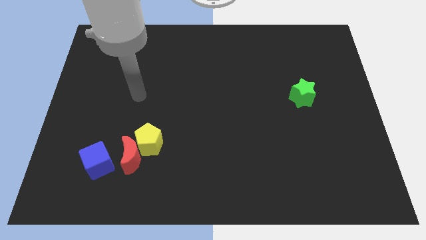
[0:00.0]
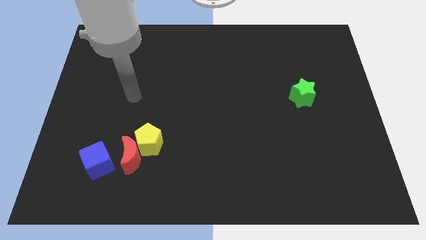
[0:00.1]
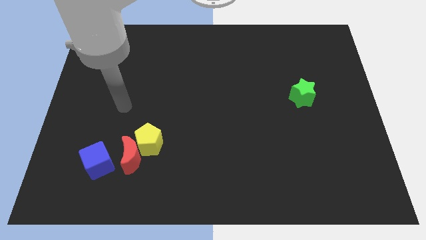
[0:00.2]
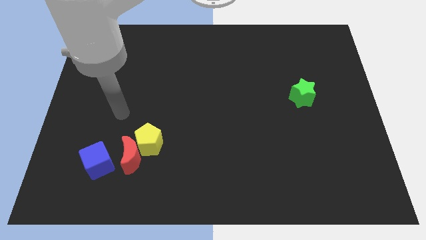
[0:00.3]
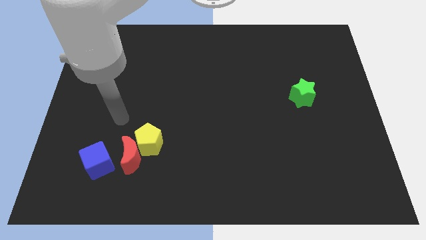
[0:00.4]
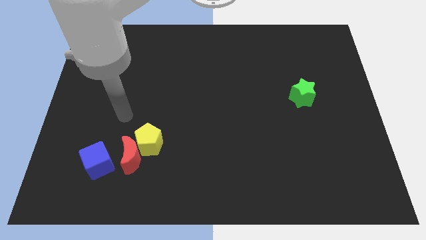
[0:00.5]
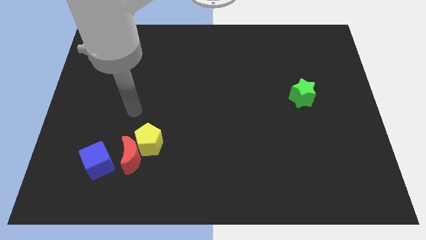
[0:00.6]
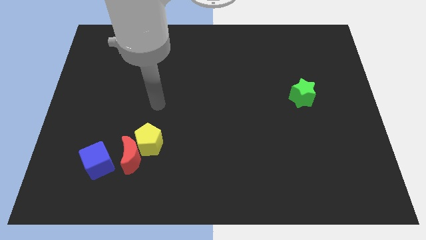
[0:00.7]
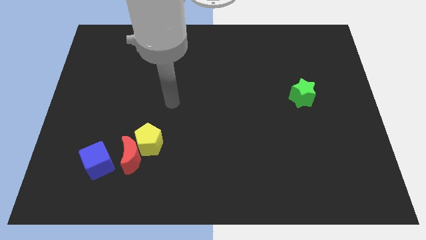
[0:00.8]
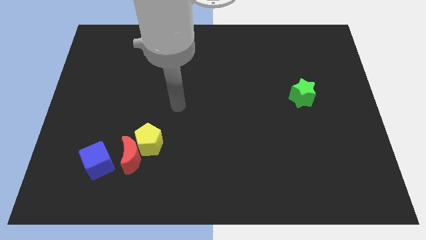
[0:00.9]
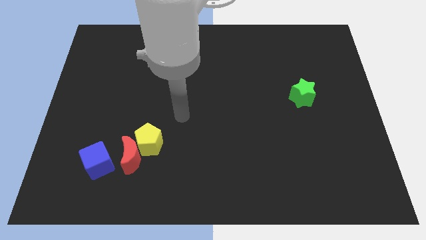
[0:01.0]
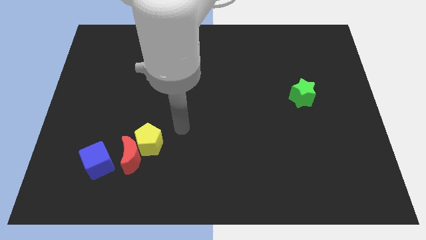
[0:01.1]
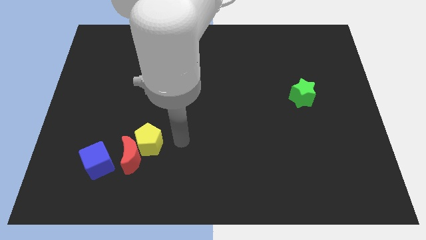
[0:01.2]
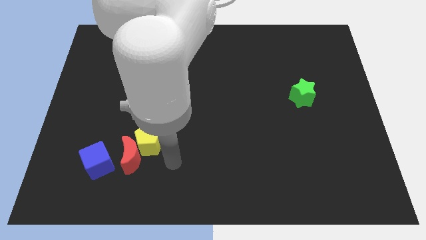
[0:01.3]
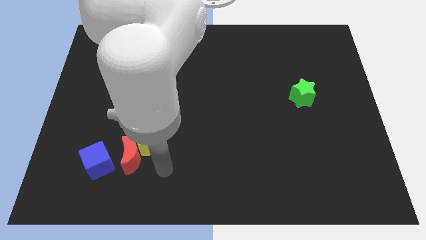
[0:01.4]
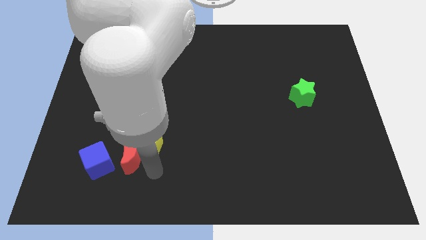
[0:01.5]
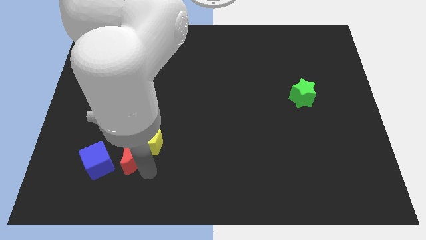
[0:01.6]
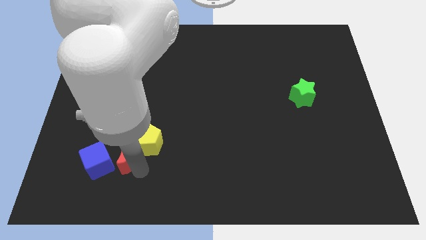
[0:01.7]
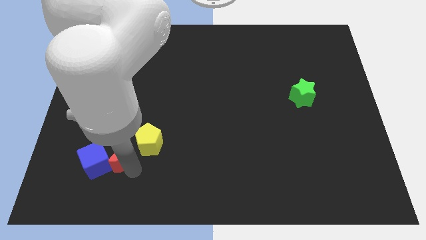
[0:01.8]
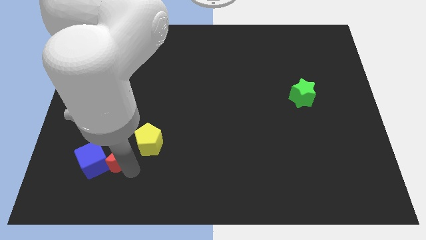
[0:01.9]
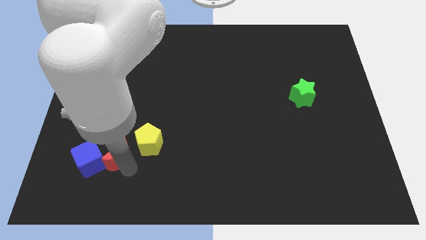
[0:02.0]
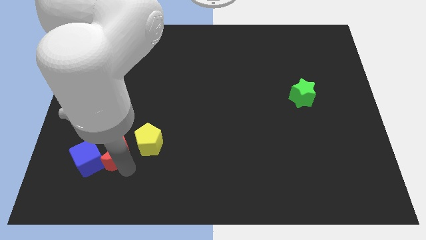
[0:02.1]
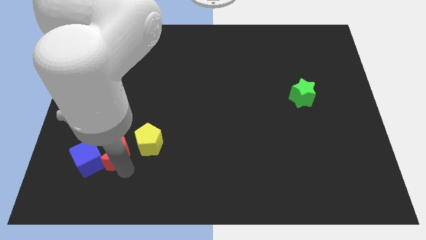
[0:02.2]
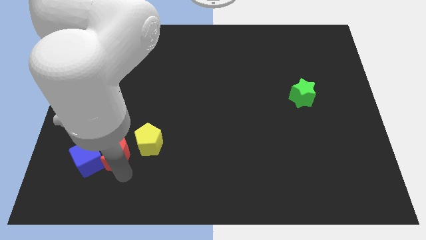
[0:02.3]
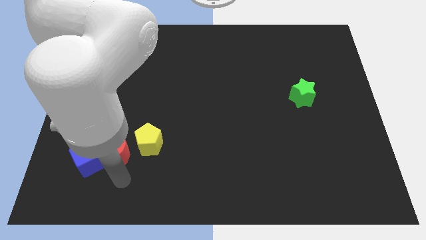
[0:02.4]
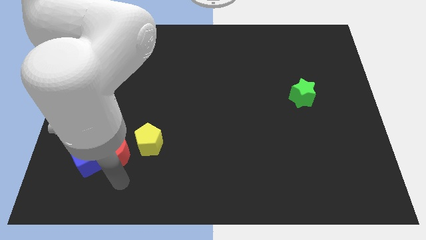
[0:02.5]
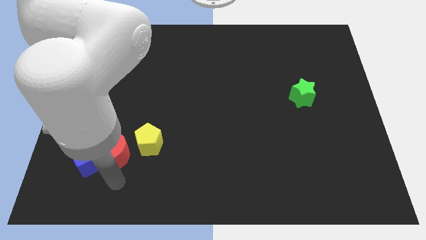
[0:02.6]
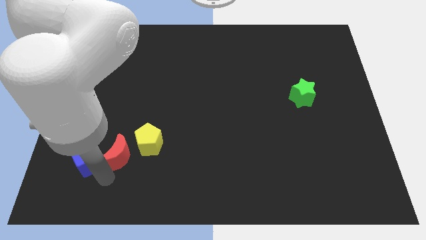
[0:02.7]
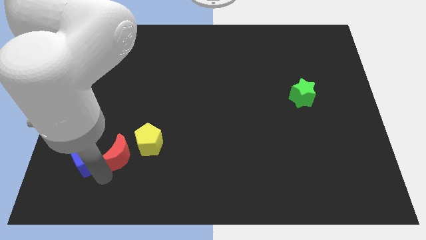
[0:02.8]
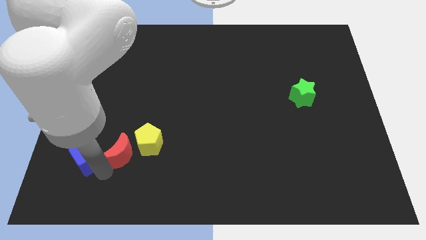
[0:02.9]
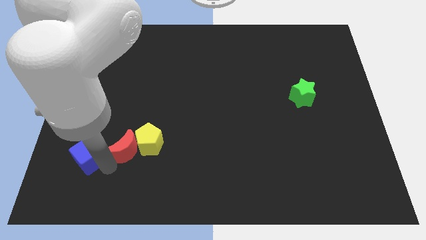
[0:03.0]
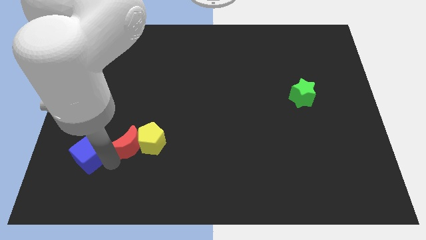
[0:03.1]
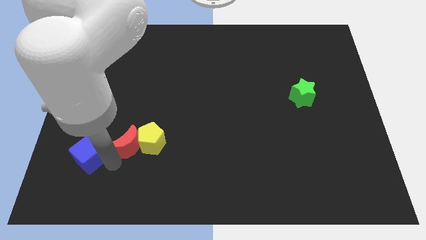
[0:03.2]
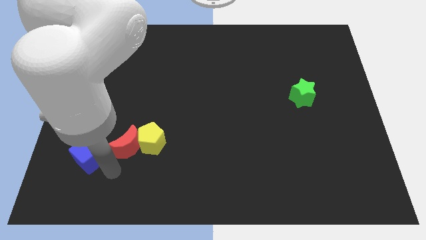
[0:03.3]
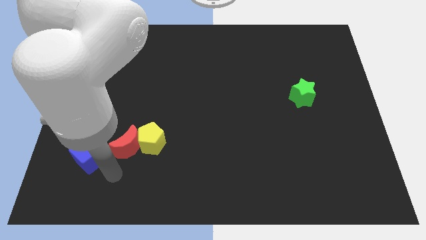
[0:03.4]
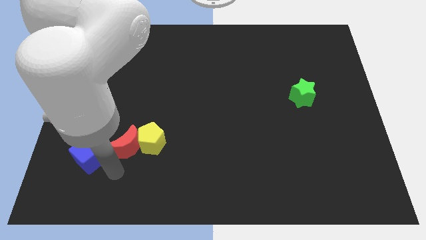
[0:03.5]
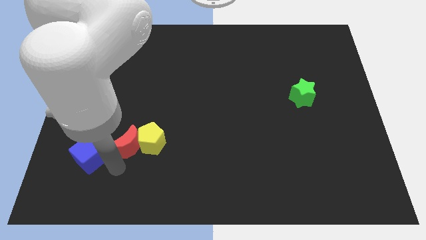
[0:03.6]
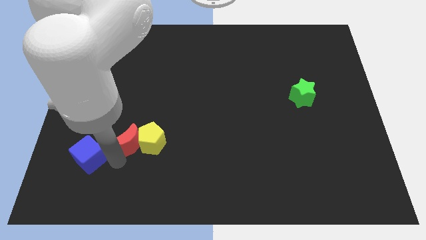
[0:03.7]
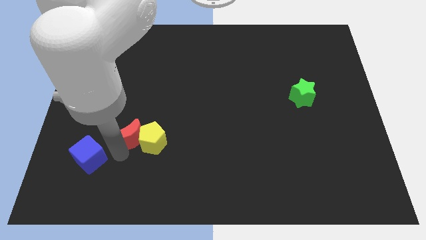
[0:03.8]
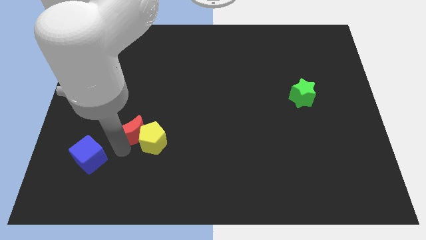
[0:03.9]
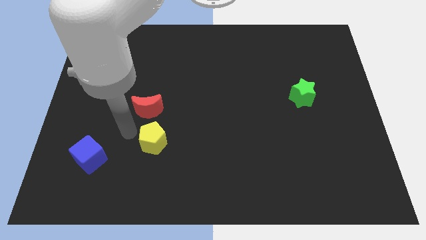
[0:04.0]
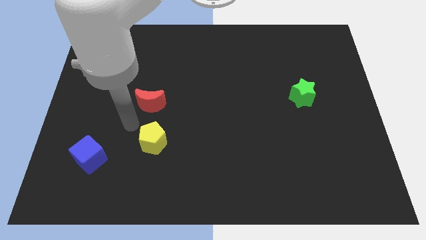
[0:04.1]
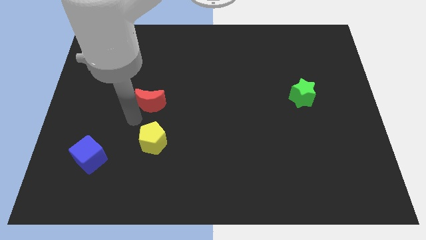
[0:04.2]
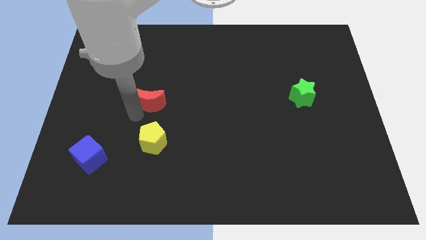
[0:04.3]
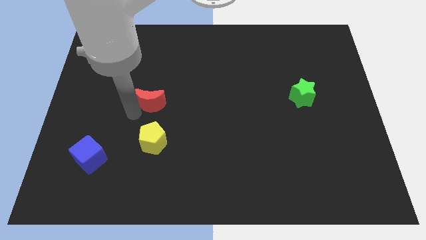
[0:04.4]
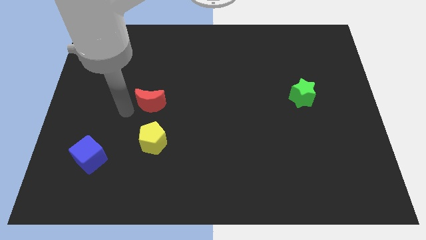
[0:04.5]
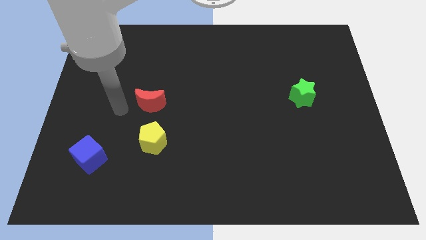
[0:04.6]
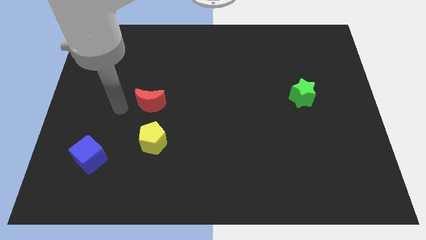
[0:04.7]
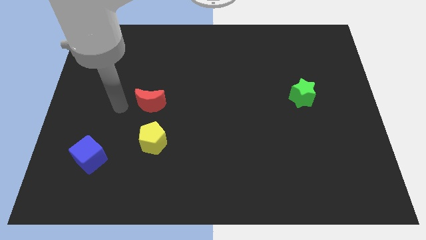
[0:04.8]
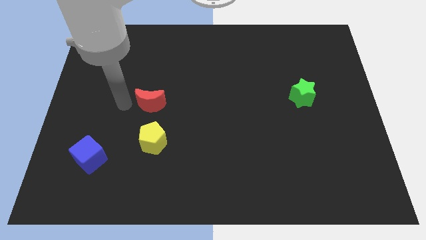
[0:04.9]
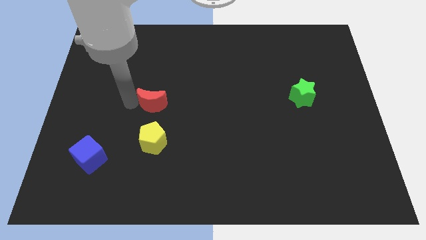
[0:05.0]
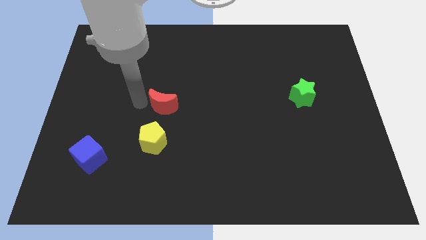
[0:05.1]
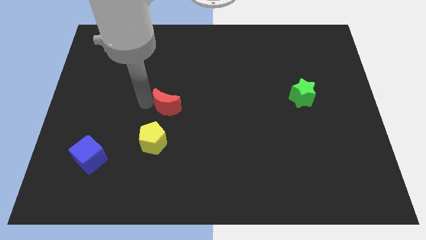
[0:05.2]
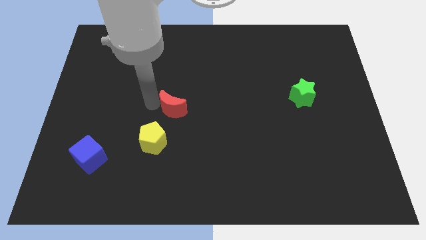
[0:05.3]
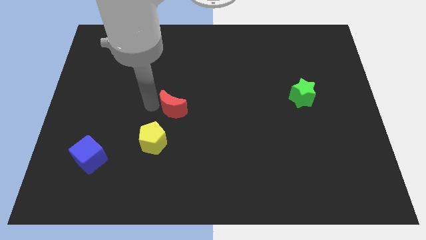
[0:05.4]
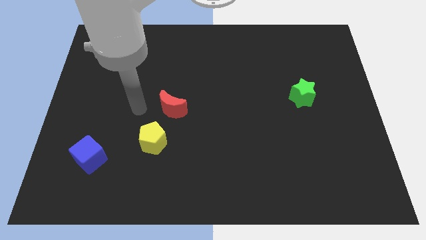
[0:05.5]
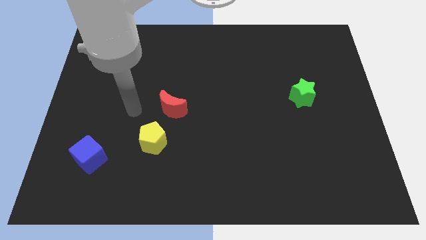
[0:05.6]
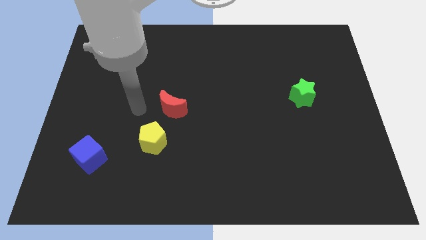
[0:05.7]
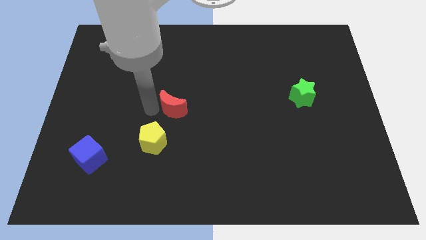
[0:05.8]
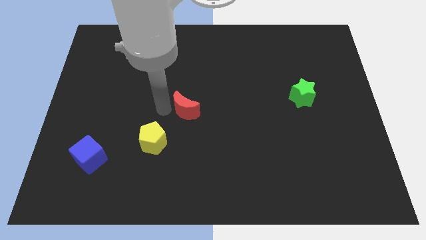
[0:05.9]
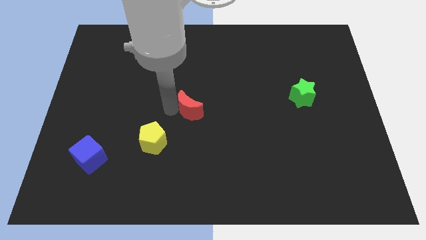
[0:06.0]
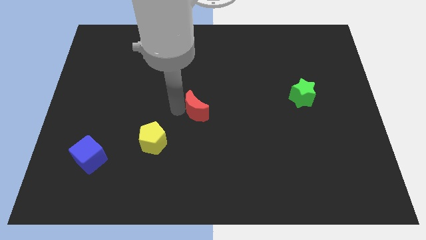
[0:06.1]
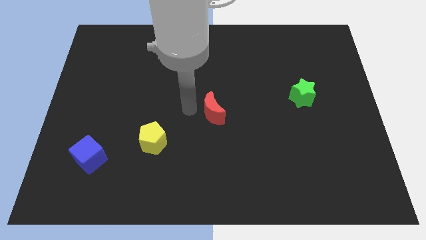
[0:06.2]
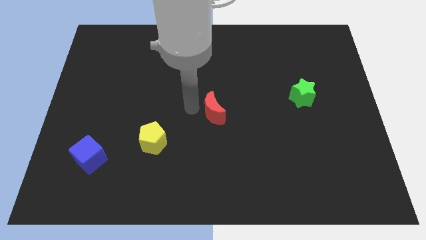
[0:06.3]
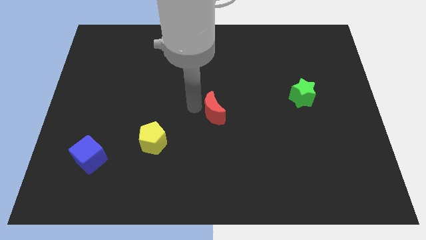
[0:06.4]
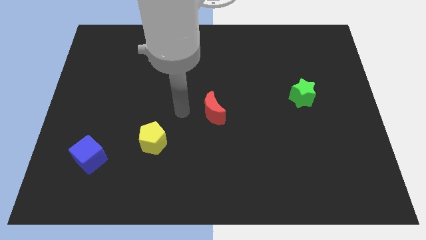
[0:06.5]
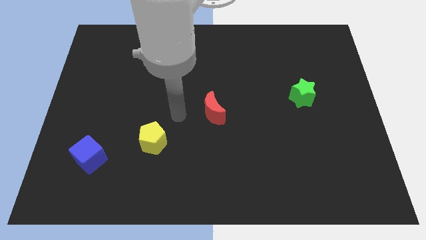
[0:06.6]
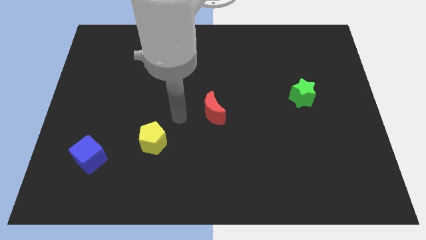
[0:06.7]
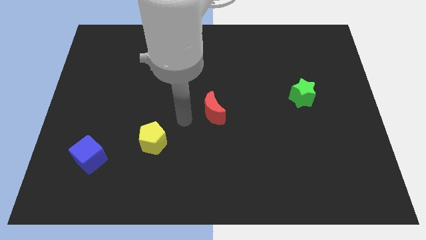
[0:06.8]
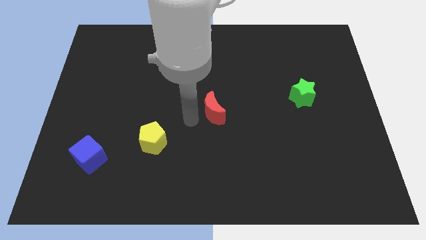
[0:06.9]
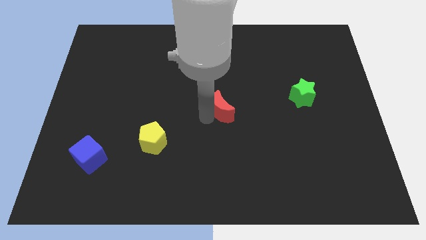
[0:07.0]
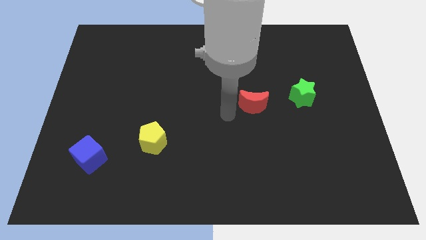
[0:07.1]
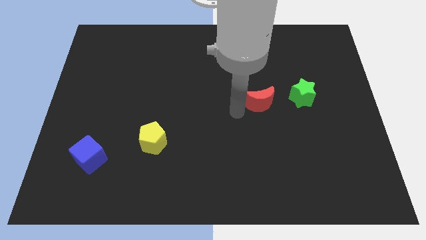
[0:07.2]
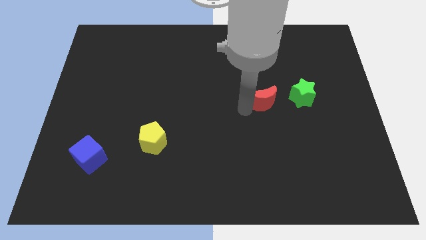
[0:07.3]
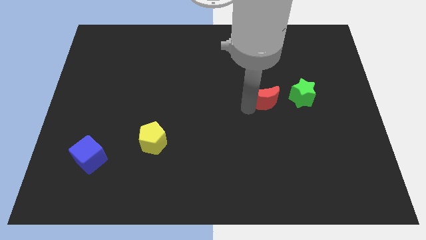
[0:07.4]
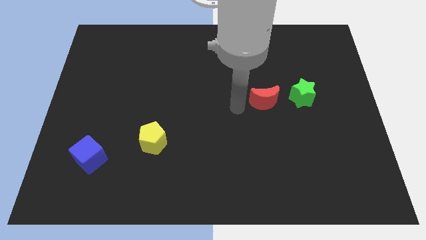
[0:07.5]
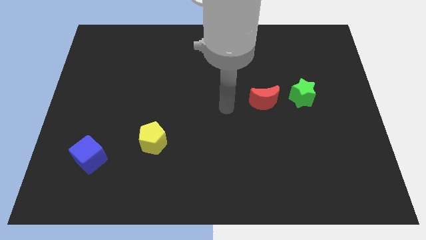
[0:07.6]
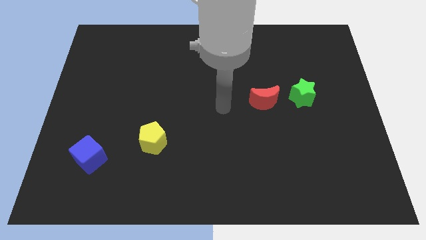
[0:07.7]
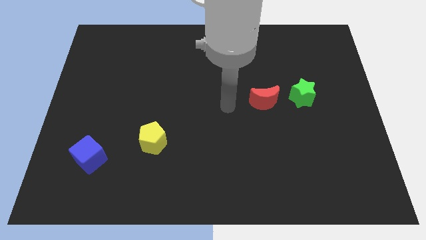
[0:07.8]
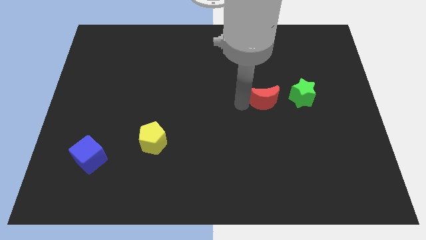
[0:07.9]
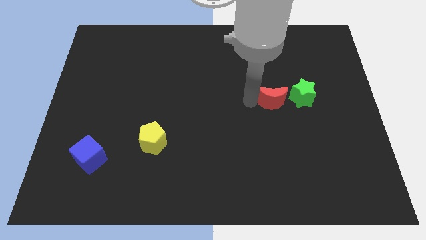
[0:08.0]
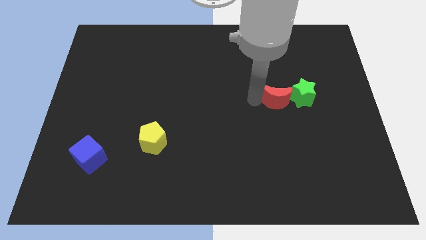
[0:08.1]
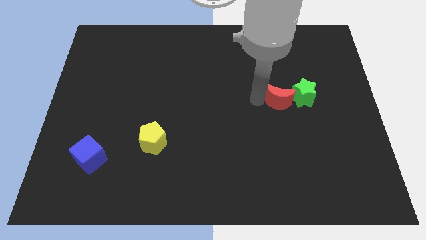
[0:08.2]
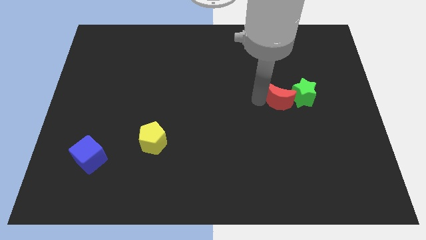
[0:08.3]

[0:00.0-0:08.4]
move the moon close to the star

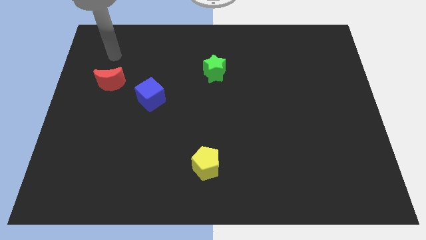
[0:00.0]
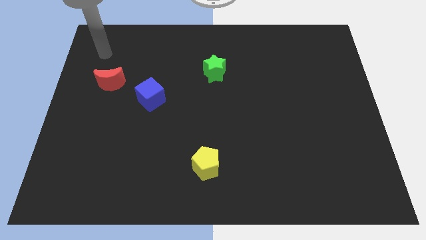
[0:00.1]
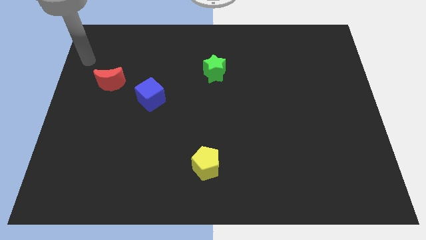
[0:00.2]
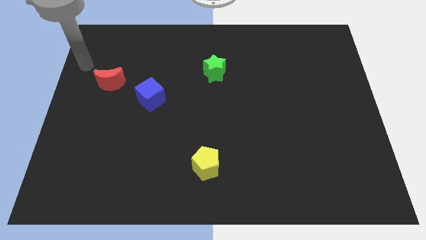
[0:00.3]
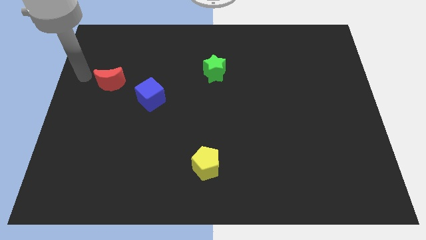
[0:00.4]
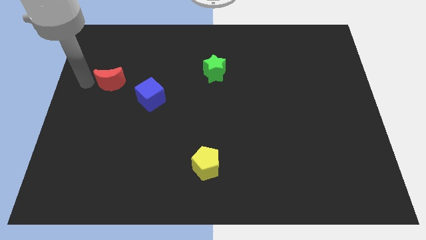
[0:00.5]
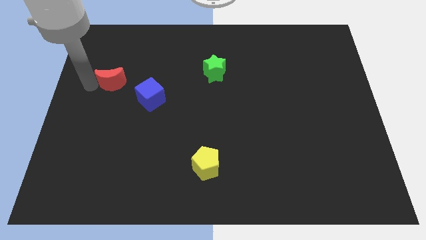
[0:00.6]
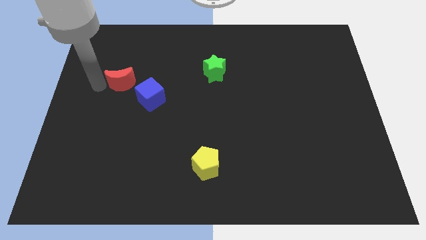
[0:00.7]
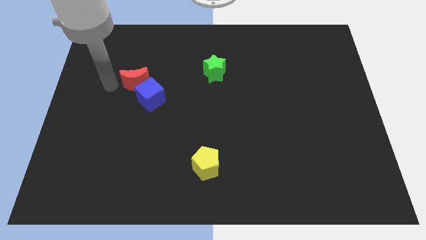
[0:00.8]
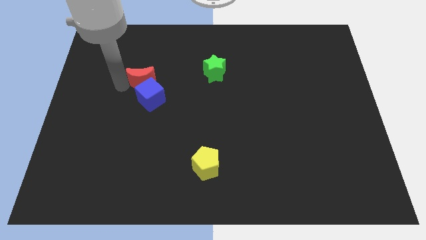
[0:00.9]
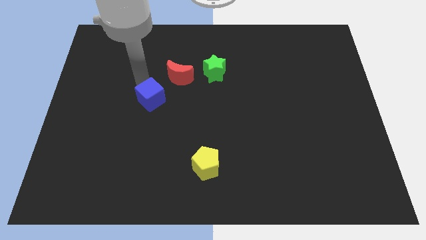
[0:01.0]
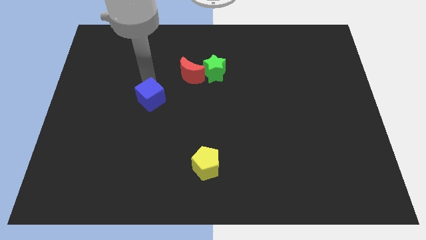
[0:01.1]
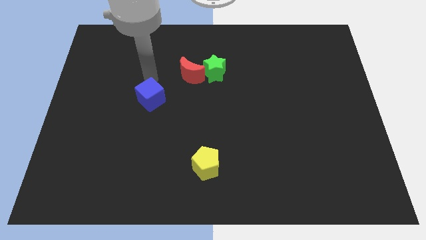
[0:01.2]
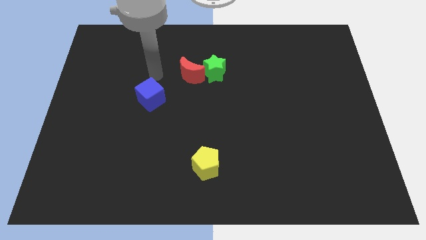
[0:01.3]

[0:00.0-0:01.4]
slide the red moon towards the star
